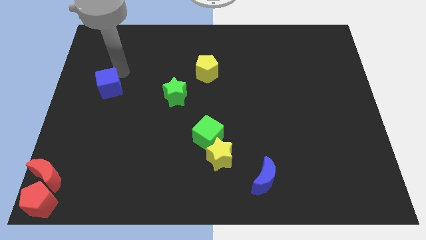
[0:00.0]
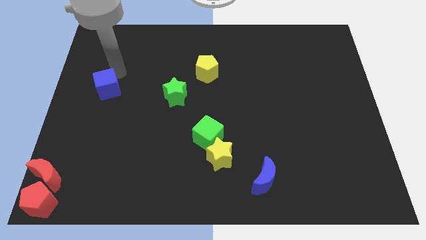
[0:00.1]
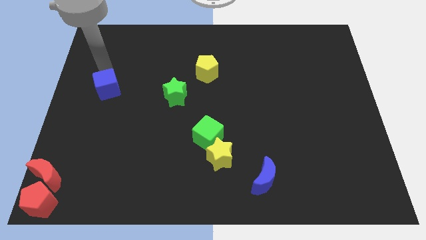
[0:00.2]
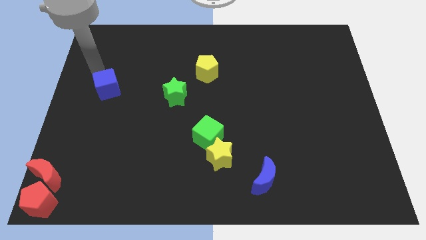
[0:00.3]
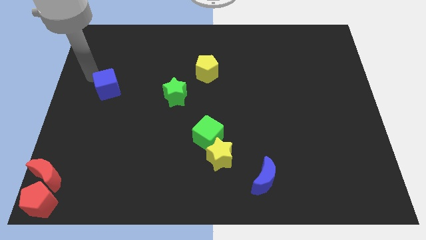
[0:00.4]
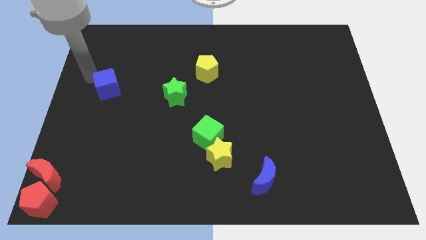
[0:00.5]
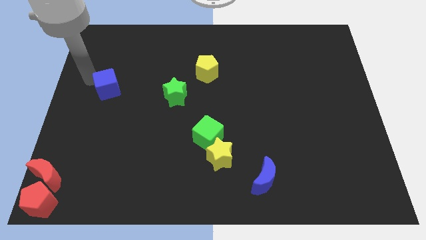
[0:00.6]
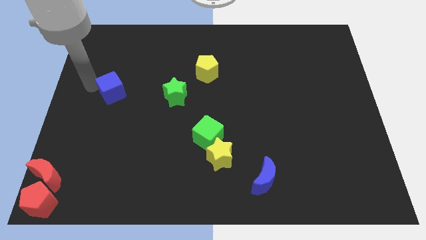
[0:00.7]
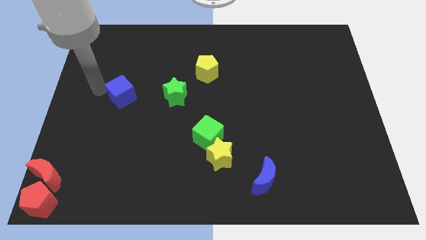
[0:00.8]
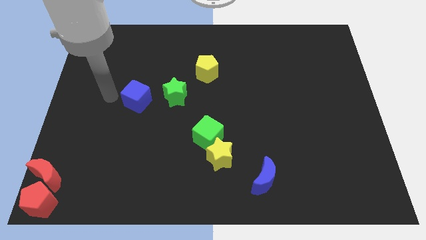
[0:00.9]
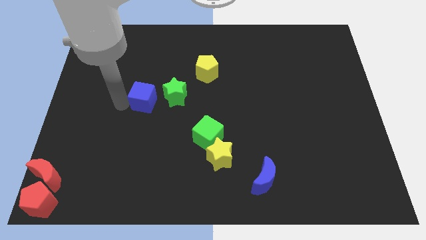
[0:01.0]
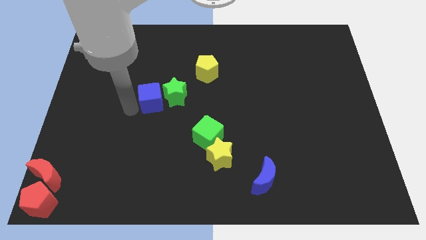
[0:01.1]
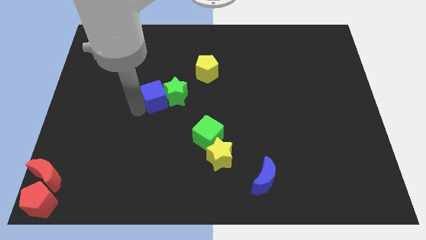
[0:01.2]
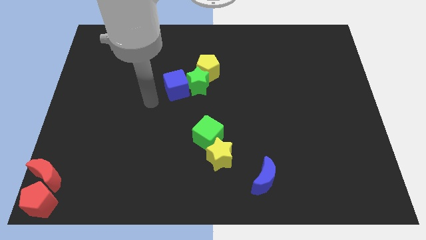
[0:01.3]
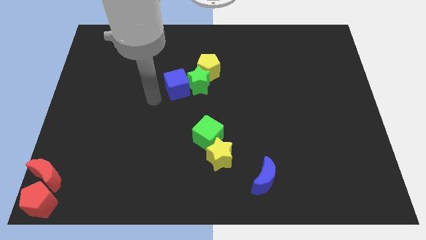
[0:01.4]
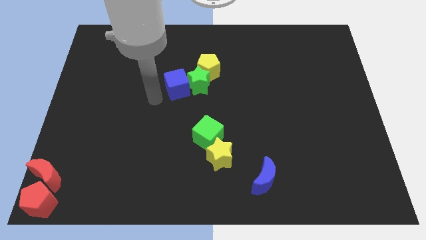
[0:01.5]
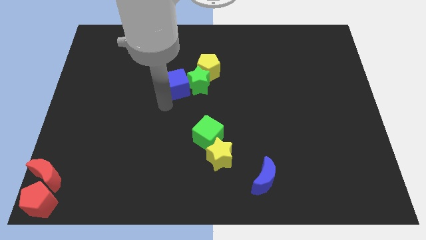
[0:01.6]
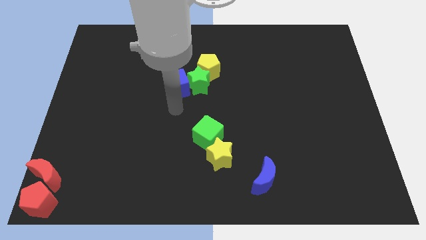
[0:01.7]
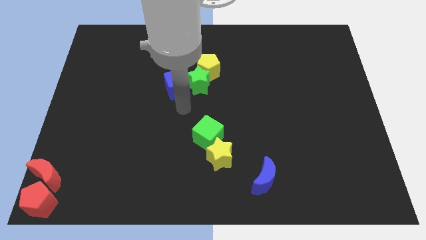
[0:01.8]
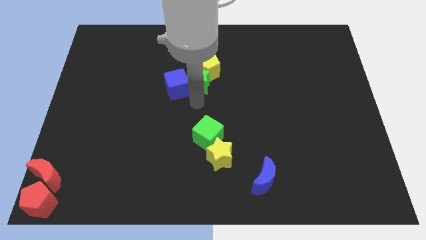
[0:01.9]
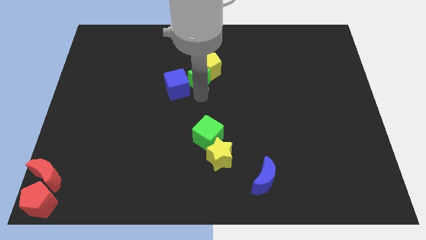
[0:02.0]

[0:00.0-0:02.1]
move the blue cube towards the left side of the green star

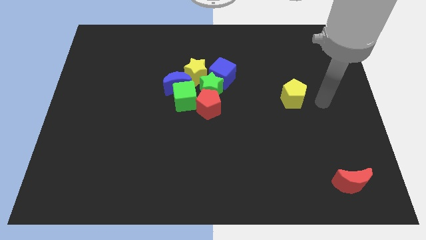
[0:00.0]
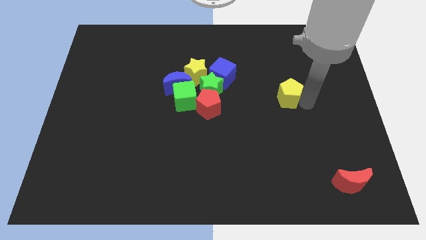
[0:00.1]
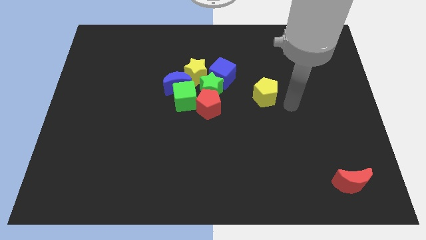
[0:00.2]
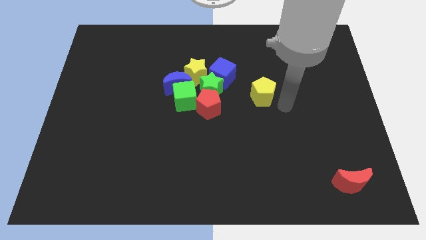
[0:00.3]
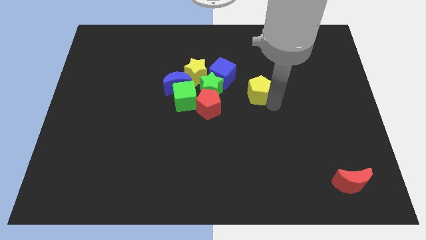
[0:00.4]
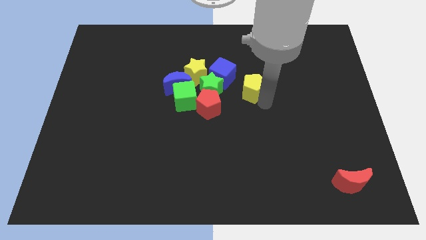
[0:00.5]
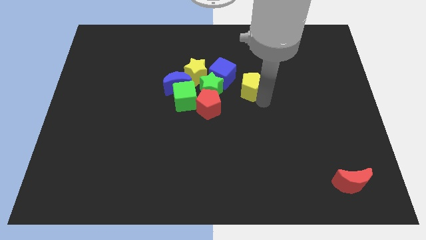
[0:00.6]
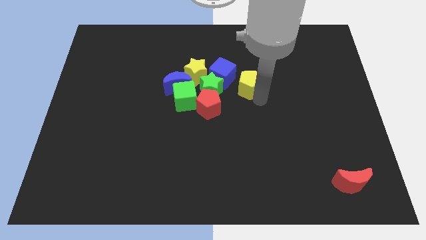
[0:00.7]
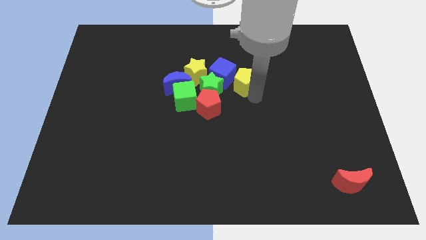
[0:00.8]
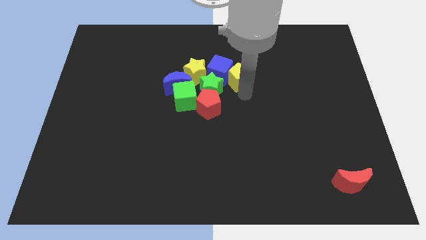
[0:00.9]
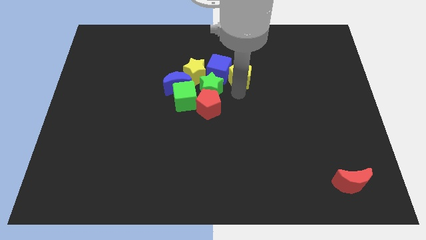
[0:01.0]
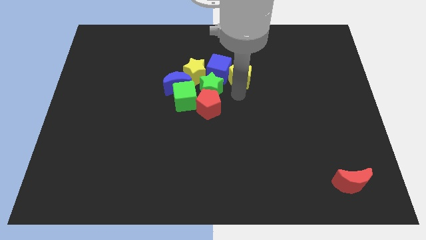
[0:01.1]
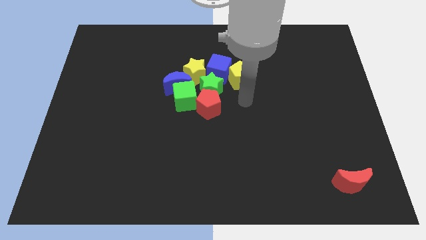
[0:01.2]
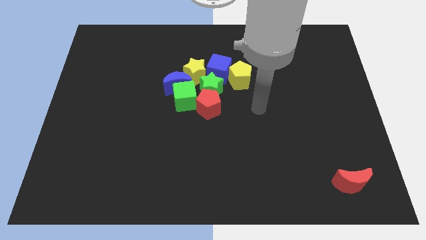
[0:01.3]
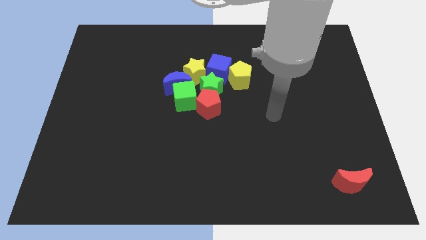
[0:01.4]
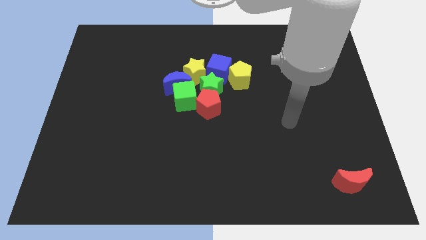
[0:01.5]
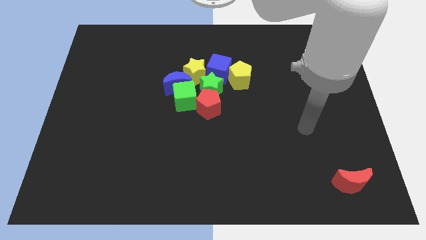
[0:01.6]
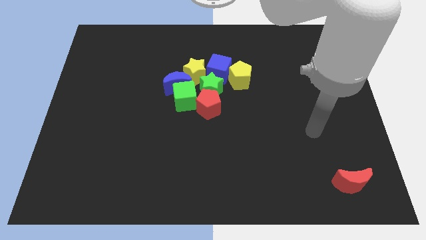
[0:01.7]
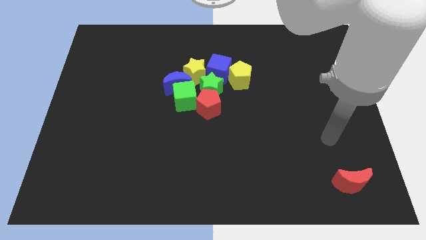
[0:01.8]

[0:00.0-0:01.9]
move the yellow pentagon to the right side of the blue cube

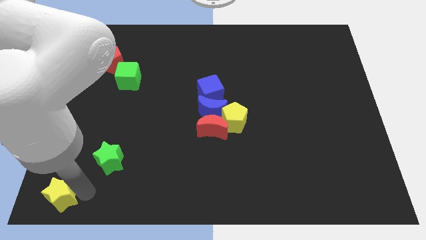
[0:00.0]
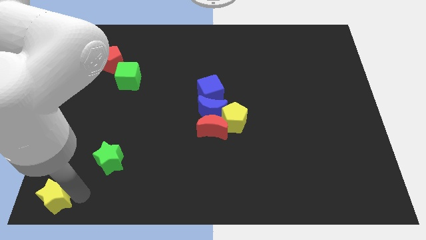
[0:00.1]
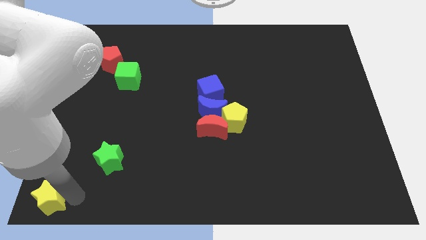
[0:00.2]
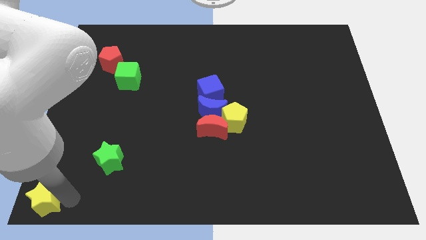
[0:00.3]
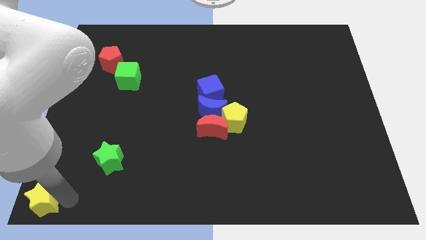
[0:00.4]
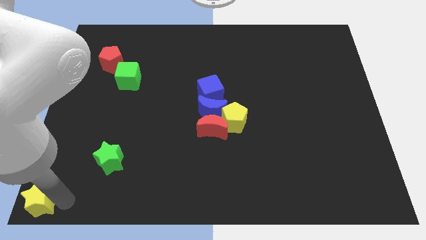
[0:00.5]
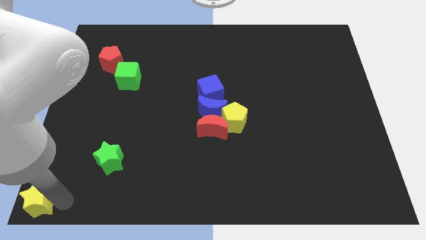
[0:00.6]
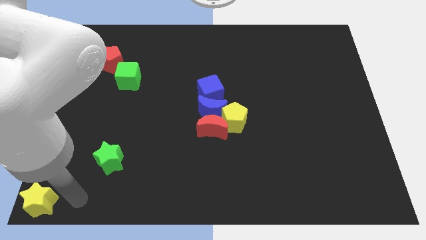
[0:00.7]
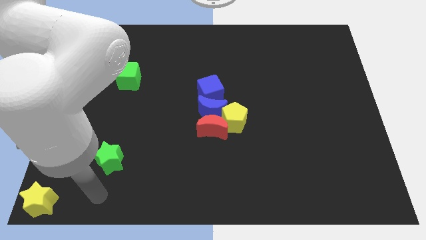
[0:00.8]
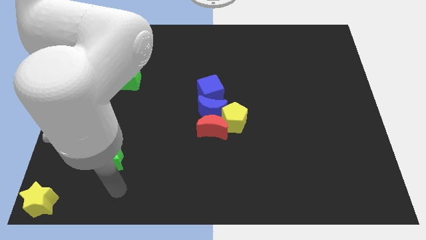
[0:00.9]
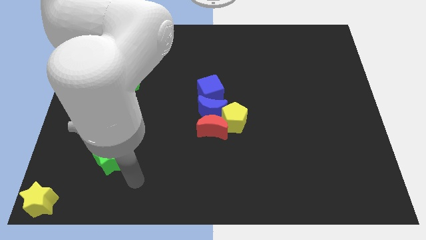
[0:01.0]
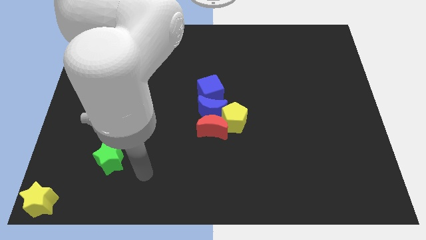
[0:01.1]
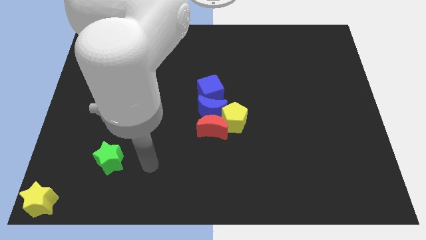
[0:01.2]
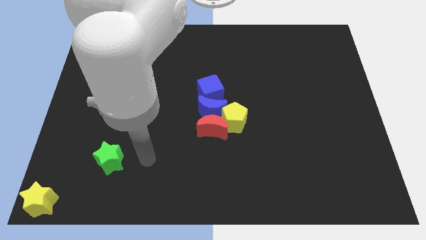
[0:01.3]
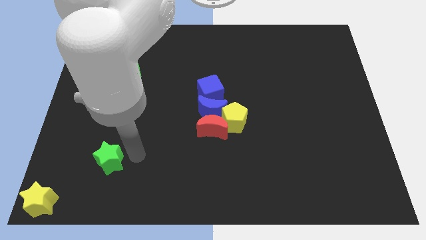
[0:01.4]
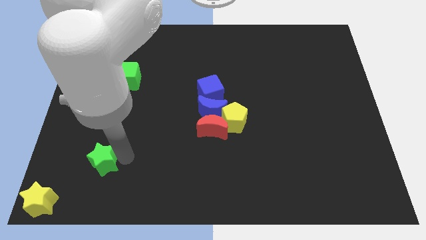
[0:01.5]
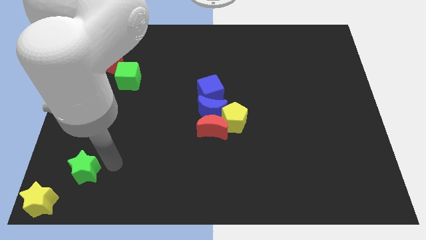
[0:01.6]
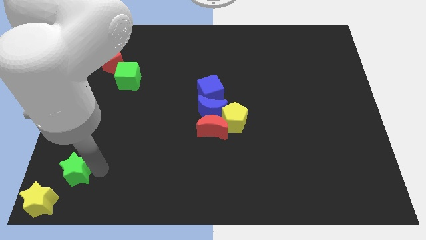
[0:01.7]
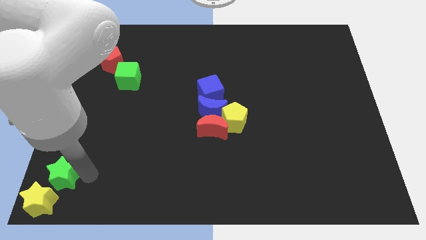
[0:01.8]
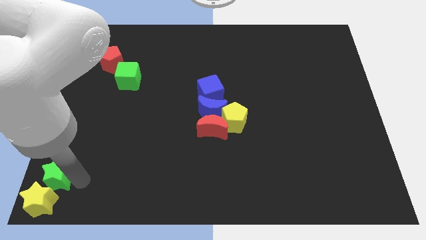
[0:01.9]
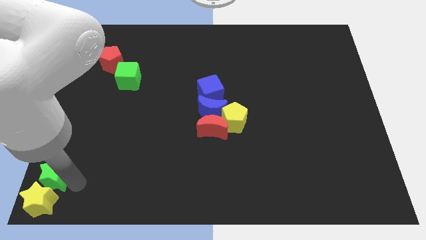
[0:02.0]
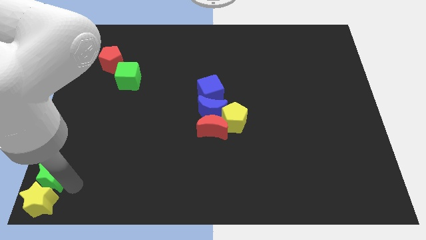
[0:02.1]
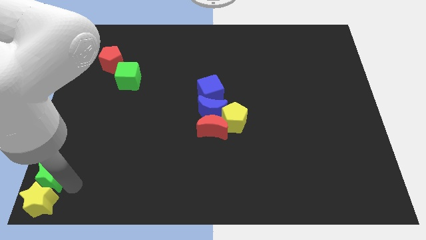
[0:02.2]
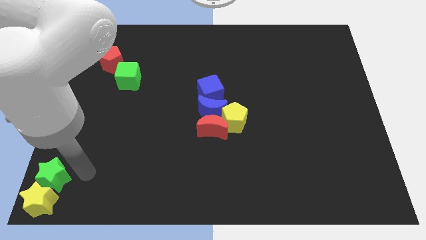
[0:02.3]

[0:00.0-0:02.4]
push the yellow and green star to the bottom left corner

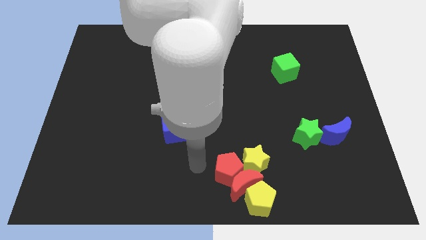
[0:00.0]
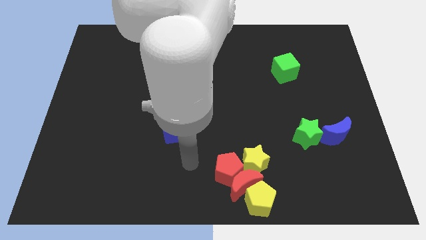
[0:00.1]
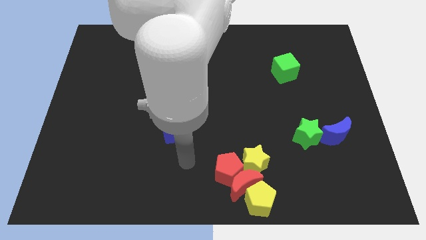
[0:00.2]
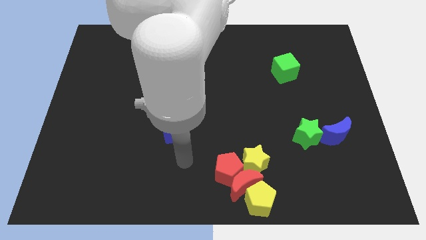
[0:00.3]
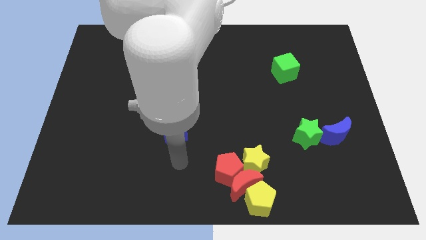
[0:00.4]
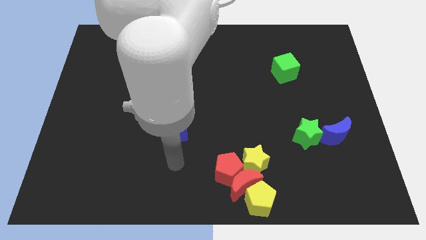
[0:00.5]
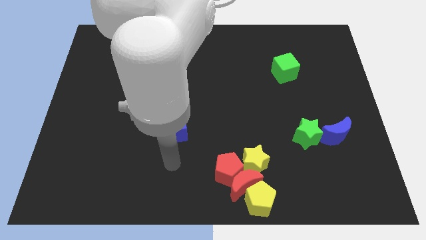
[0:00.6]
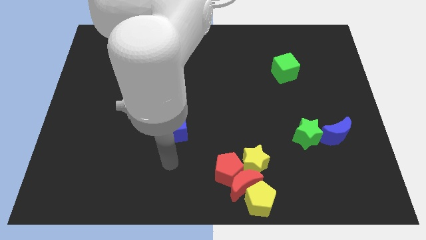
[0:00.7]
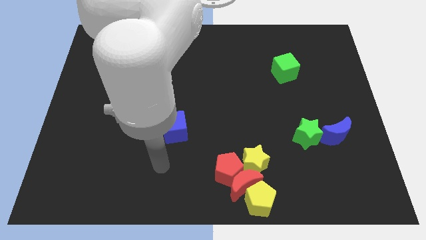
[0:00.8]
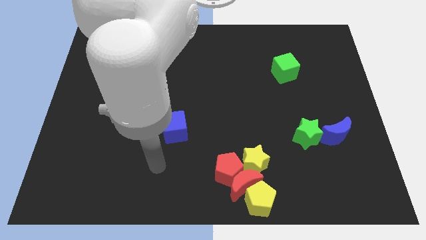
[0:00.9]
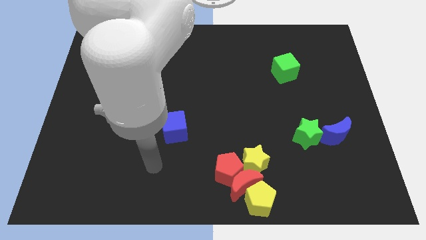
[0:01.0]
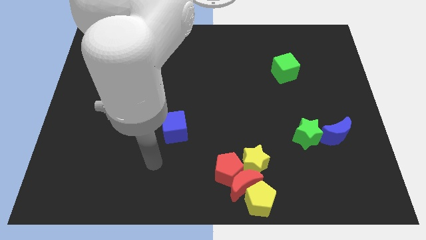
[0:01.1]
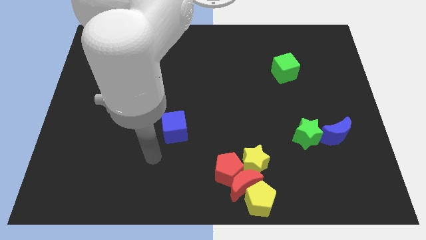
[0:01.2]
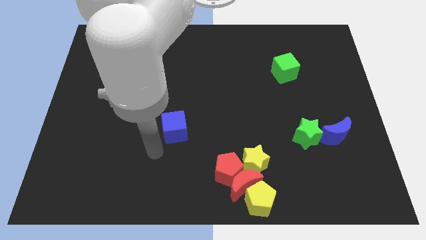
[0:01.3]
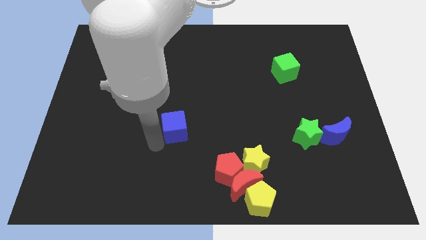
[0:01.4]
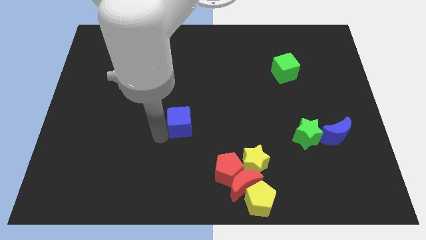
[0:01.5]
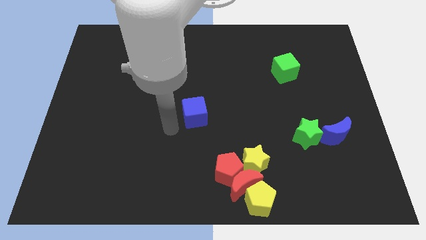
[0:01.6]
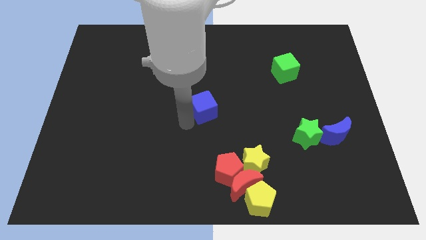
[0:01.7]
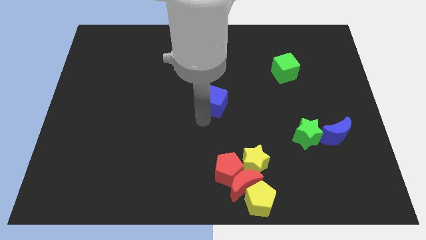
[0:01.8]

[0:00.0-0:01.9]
place the blue cube at the center of the board

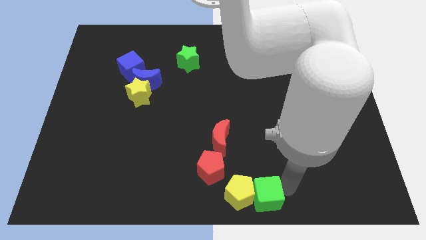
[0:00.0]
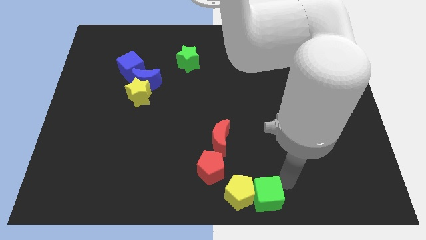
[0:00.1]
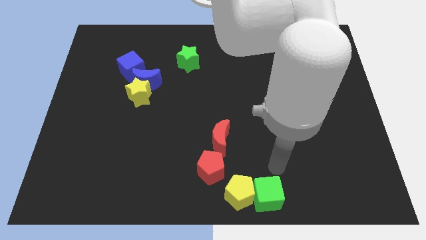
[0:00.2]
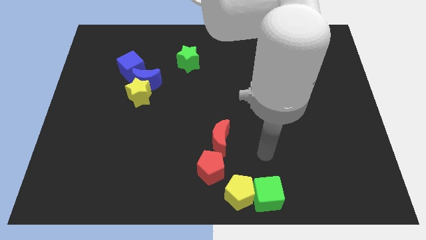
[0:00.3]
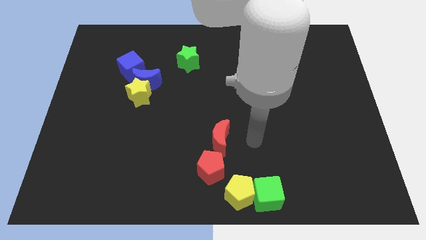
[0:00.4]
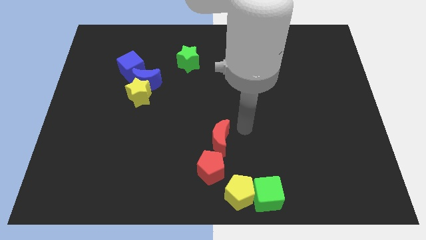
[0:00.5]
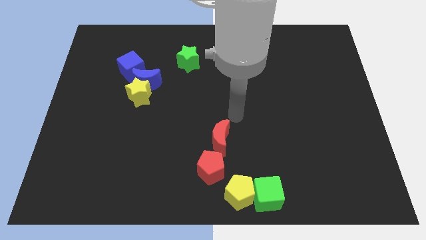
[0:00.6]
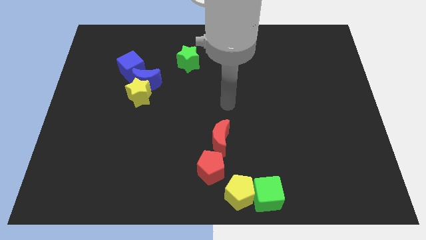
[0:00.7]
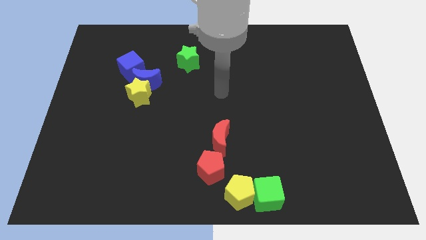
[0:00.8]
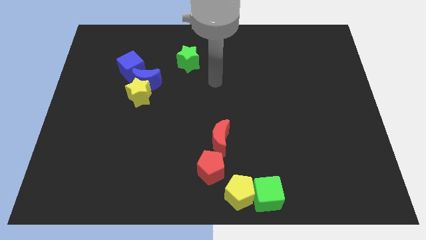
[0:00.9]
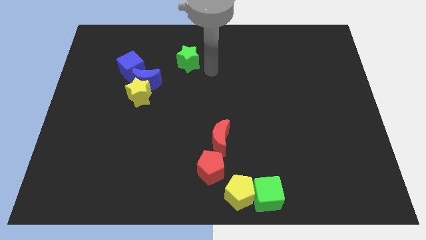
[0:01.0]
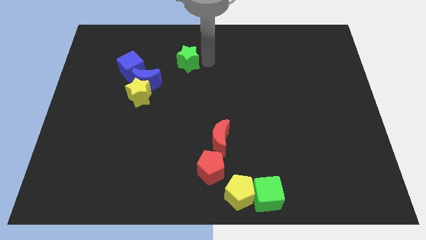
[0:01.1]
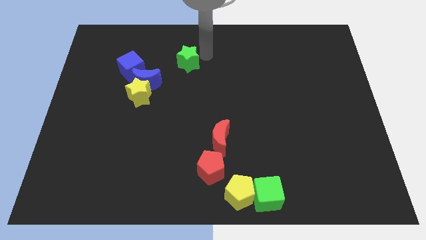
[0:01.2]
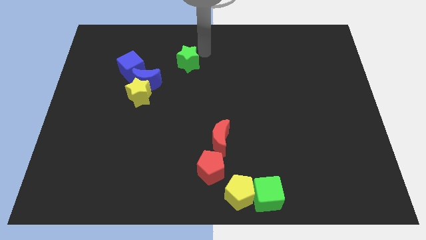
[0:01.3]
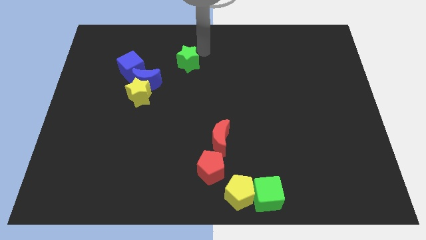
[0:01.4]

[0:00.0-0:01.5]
move your arm away from the green cube
